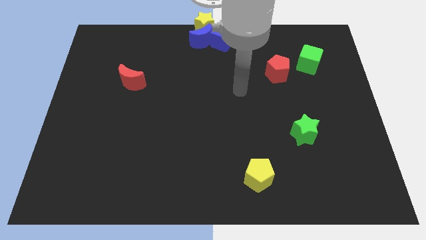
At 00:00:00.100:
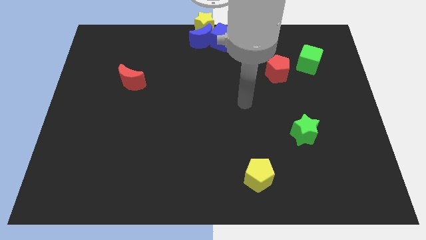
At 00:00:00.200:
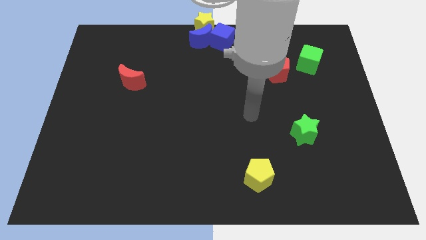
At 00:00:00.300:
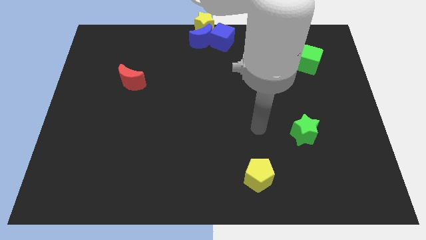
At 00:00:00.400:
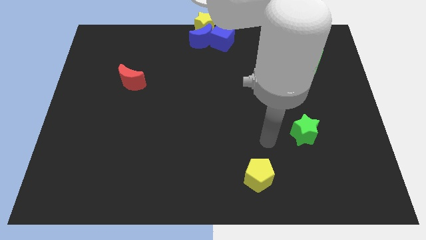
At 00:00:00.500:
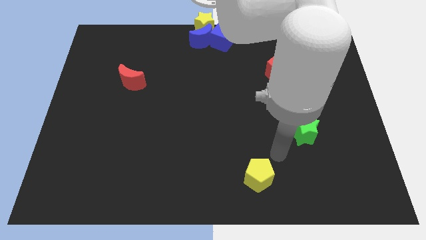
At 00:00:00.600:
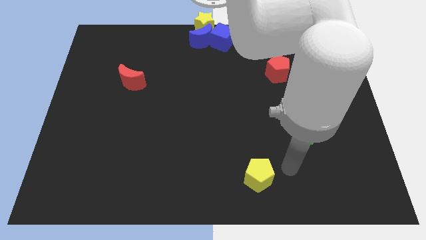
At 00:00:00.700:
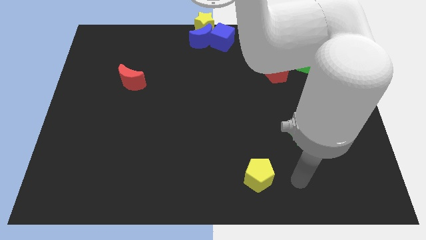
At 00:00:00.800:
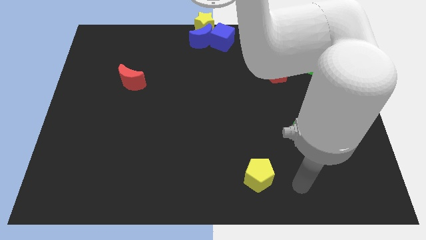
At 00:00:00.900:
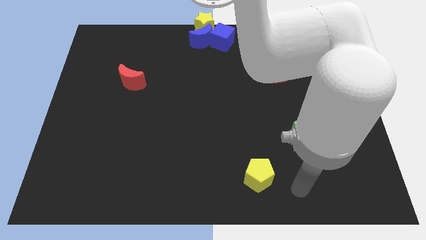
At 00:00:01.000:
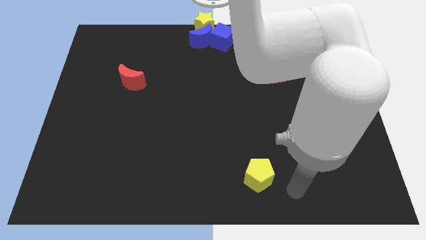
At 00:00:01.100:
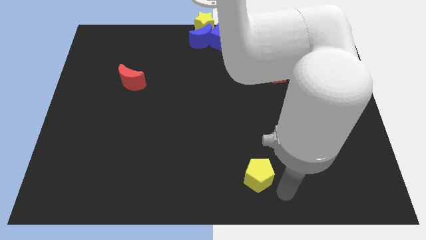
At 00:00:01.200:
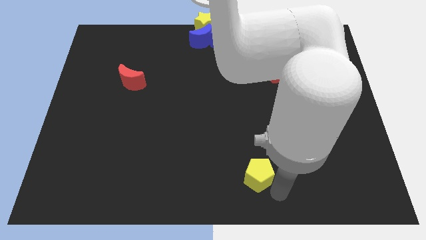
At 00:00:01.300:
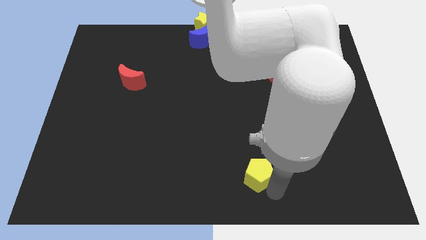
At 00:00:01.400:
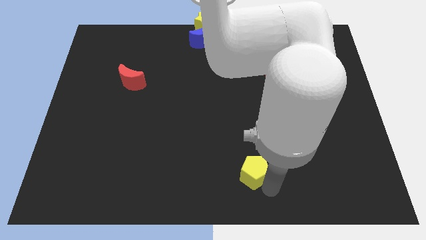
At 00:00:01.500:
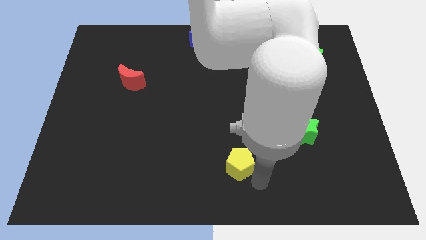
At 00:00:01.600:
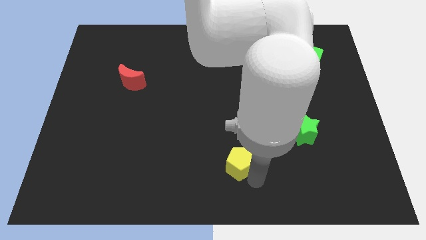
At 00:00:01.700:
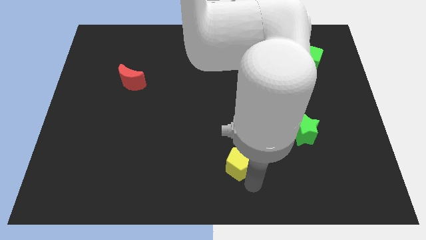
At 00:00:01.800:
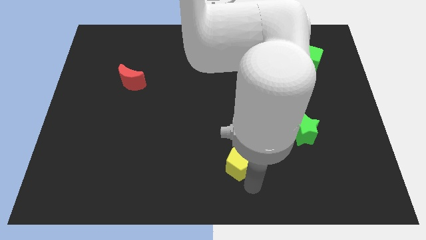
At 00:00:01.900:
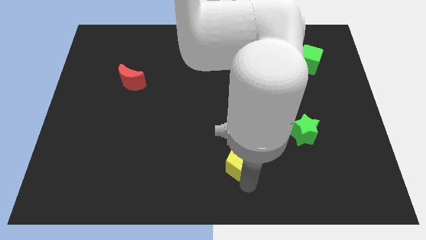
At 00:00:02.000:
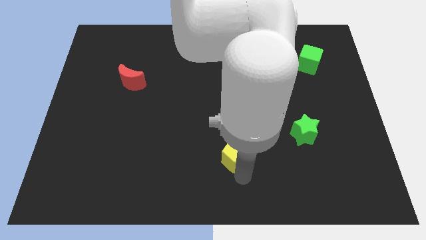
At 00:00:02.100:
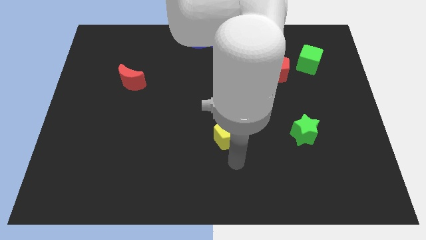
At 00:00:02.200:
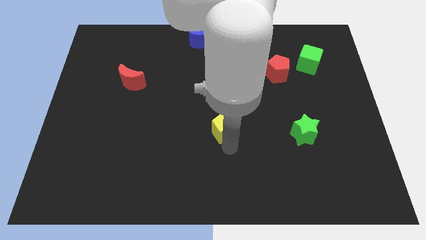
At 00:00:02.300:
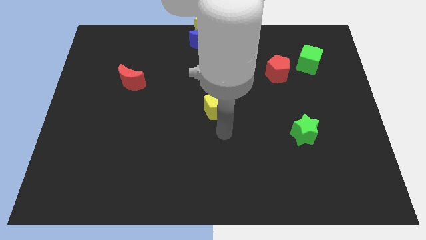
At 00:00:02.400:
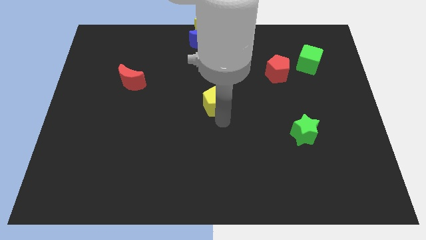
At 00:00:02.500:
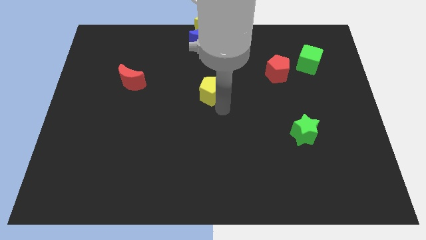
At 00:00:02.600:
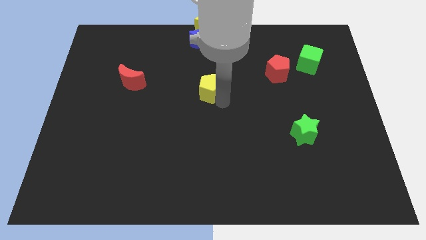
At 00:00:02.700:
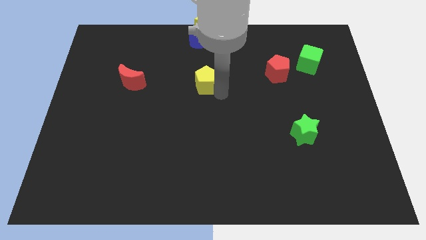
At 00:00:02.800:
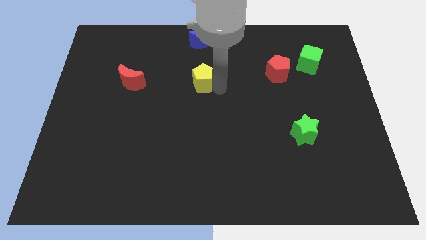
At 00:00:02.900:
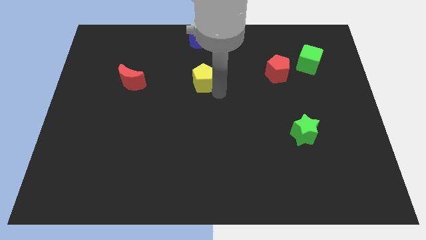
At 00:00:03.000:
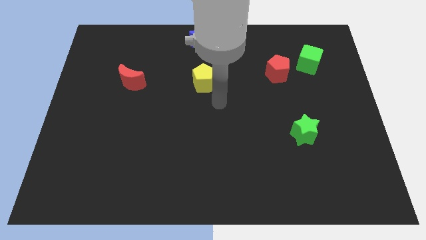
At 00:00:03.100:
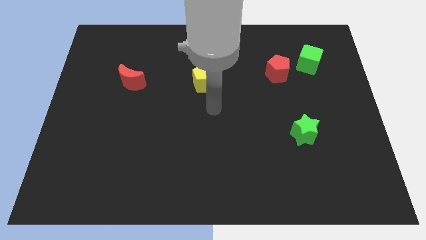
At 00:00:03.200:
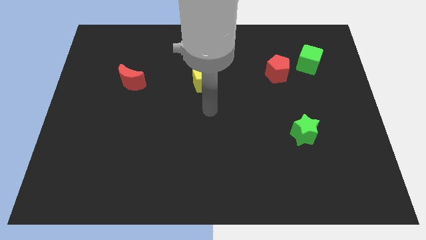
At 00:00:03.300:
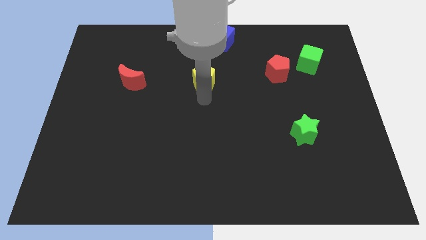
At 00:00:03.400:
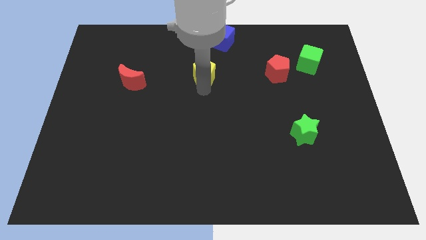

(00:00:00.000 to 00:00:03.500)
place the yellow pentagon parallel to the red pentagon

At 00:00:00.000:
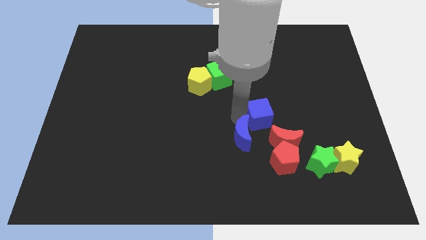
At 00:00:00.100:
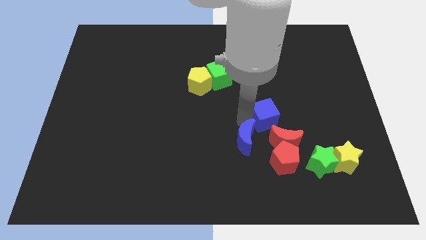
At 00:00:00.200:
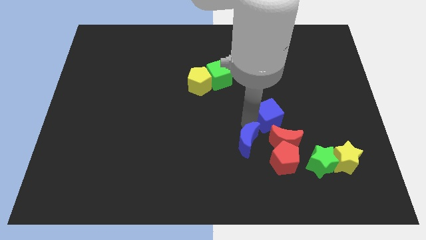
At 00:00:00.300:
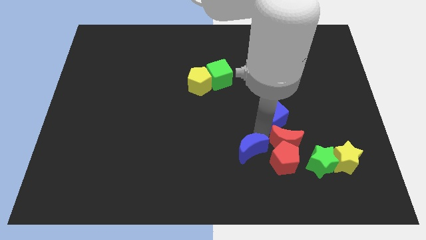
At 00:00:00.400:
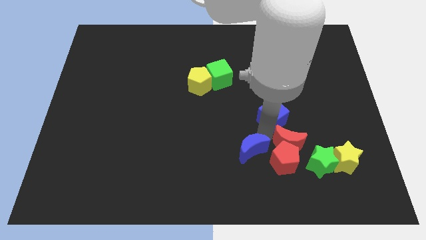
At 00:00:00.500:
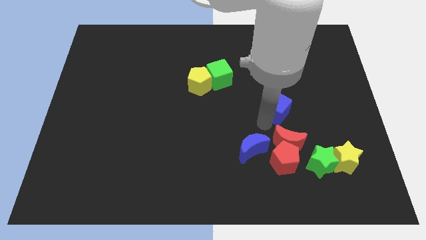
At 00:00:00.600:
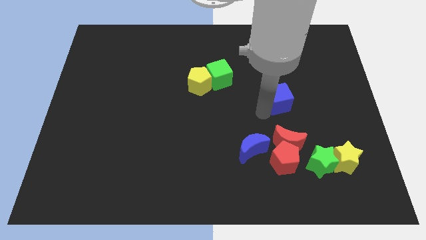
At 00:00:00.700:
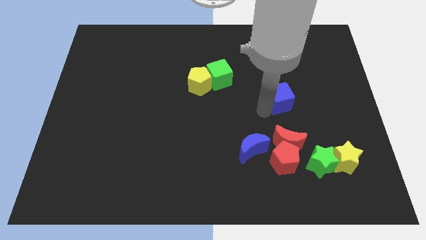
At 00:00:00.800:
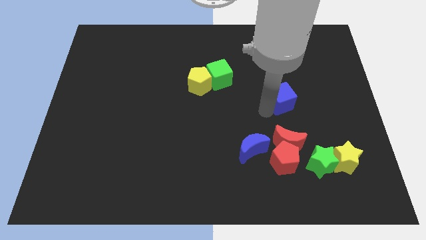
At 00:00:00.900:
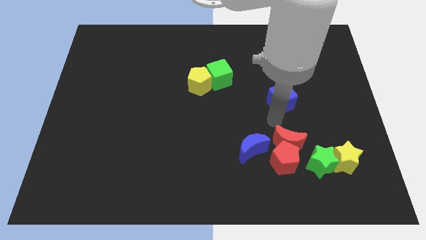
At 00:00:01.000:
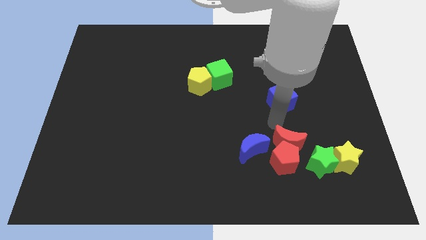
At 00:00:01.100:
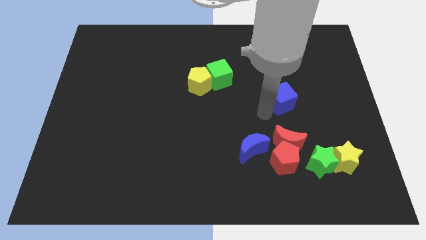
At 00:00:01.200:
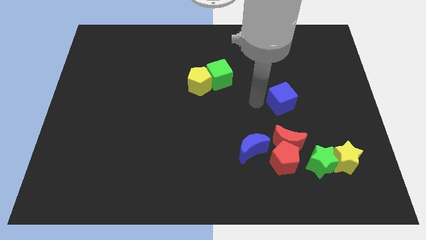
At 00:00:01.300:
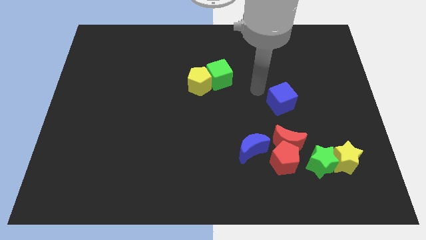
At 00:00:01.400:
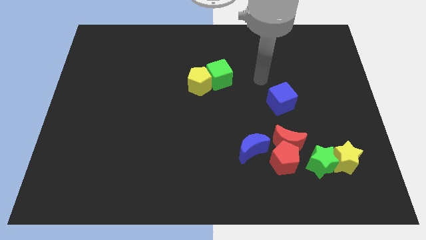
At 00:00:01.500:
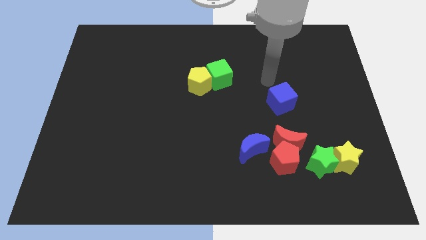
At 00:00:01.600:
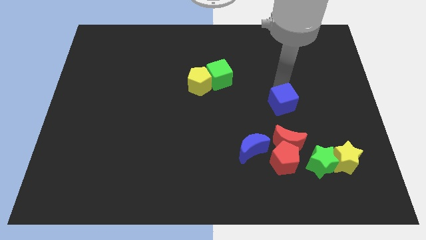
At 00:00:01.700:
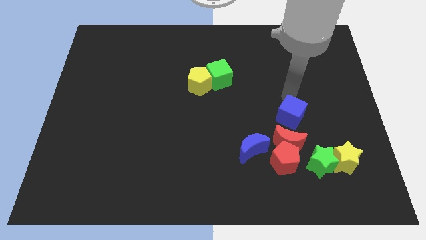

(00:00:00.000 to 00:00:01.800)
place the blue cube above the red moon

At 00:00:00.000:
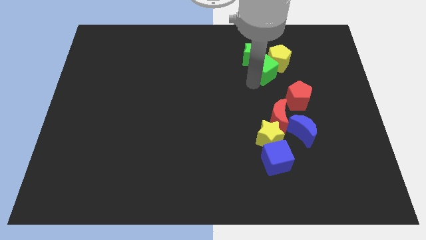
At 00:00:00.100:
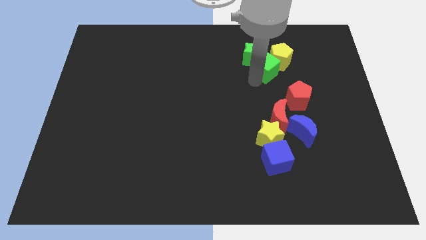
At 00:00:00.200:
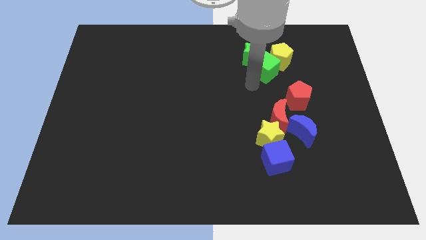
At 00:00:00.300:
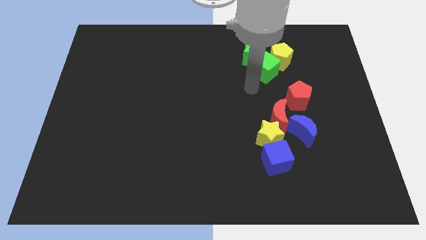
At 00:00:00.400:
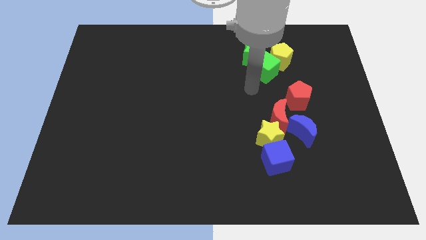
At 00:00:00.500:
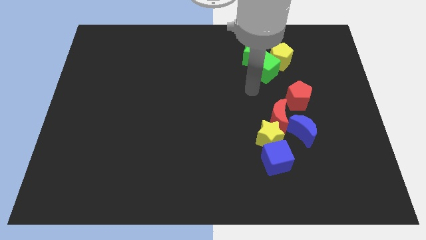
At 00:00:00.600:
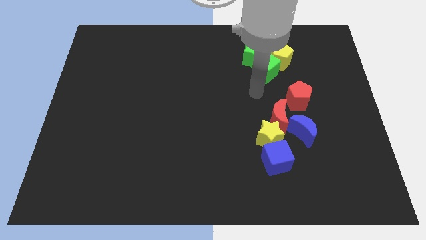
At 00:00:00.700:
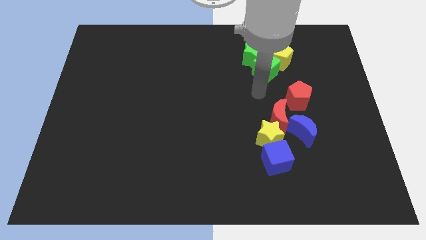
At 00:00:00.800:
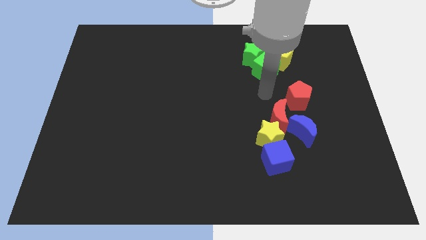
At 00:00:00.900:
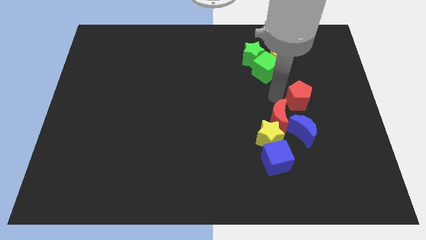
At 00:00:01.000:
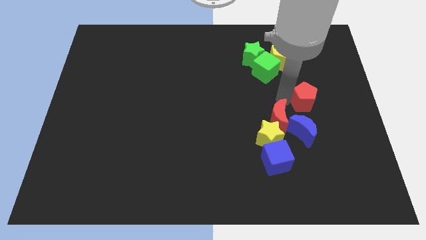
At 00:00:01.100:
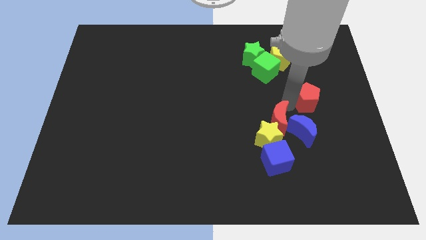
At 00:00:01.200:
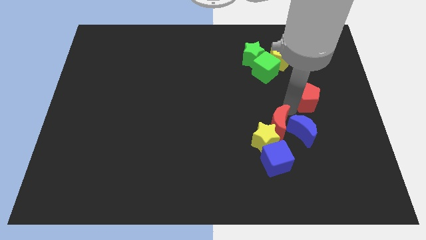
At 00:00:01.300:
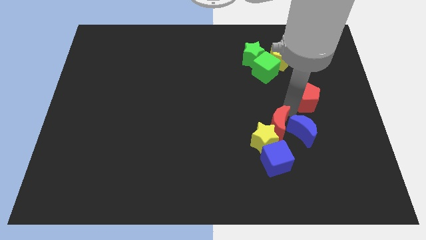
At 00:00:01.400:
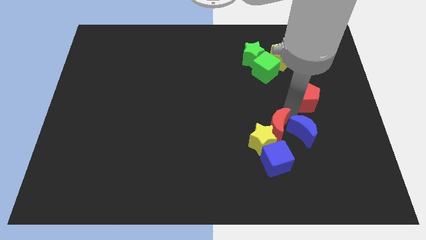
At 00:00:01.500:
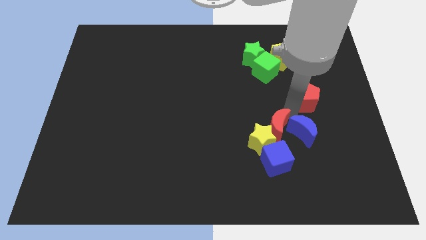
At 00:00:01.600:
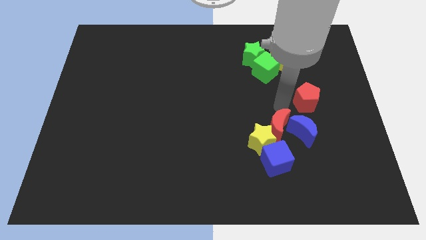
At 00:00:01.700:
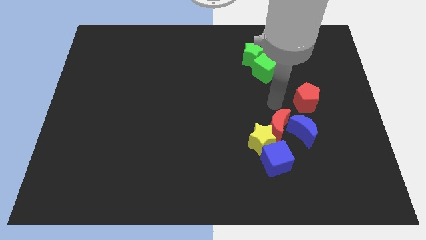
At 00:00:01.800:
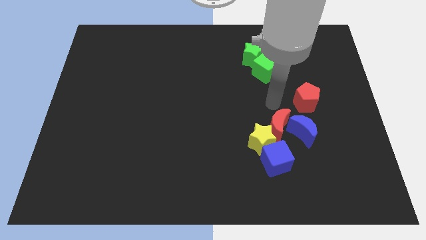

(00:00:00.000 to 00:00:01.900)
separate both the red blocks

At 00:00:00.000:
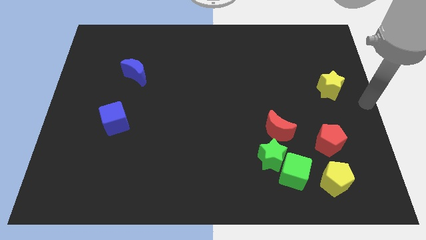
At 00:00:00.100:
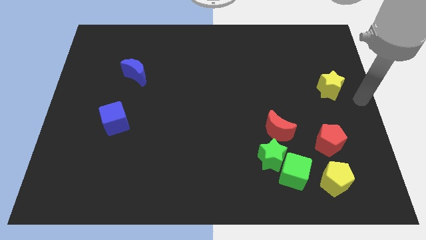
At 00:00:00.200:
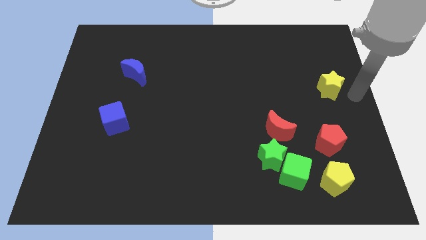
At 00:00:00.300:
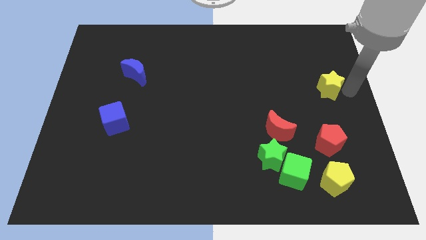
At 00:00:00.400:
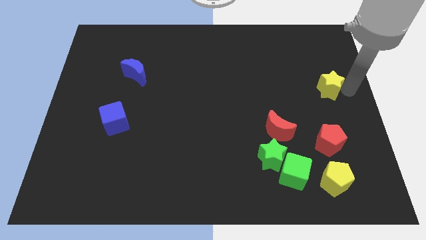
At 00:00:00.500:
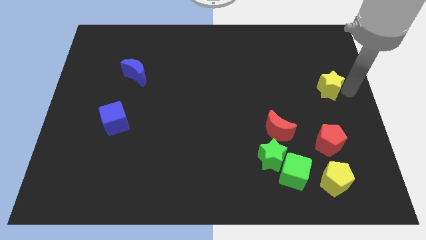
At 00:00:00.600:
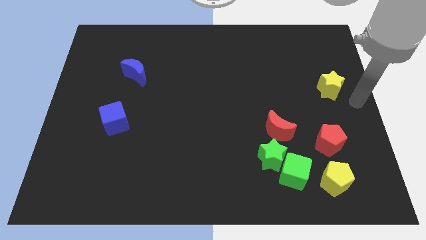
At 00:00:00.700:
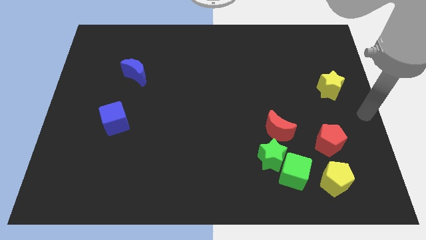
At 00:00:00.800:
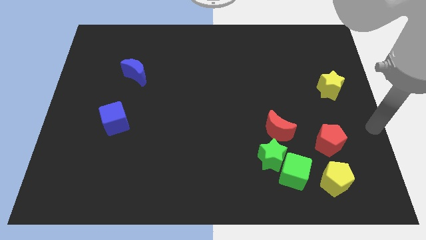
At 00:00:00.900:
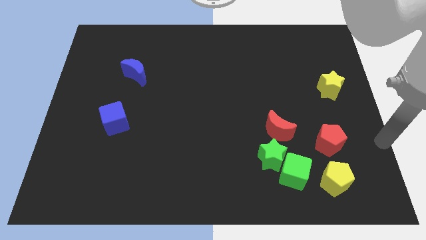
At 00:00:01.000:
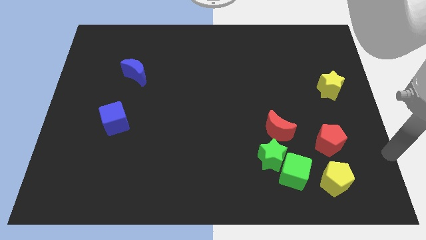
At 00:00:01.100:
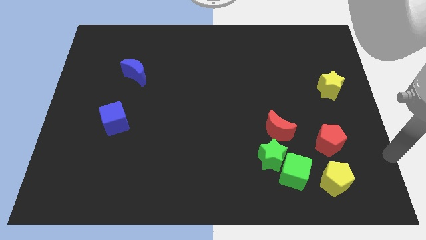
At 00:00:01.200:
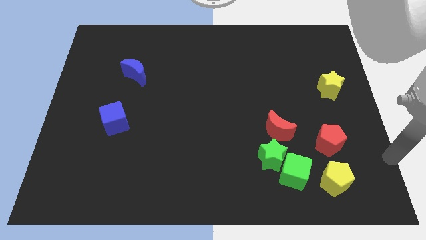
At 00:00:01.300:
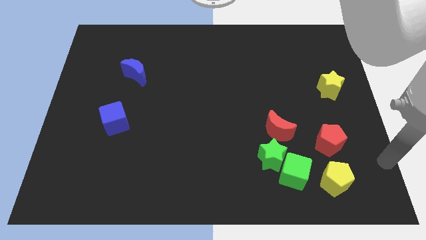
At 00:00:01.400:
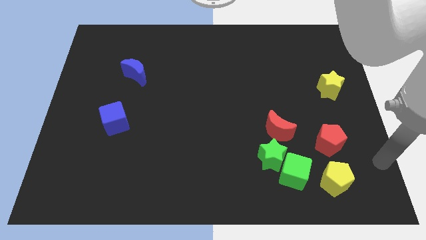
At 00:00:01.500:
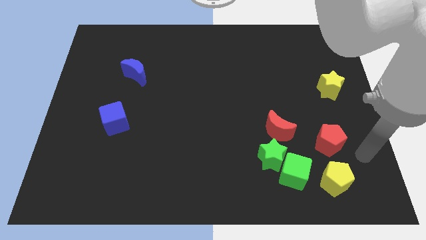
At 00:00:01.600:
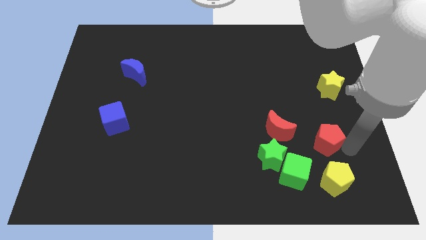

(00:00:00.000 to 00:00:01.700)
place your arm to the right of the red pentagon
